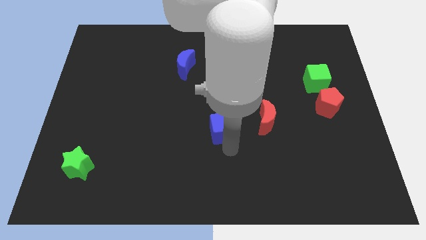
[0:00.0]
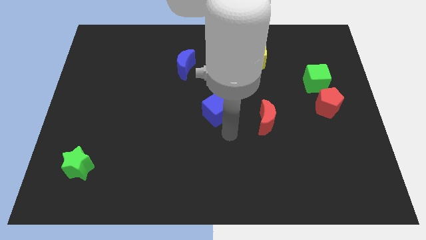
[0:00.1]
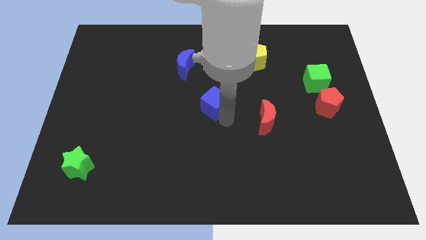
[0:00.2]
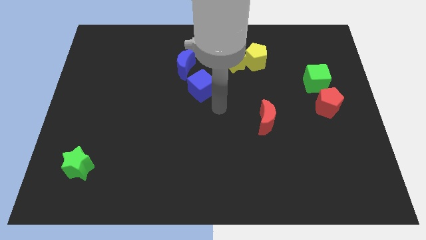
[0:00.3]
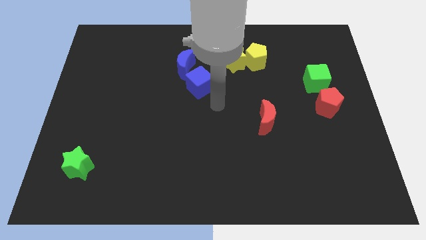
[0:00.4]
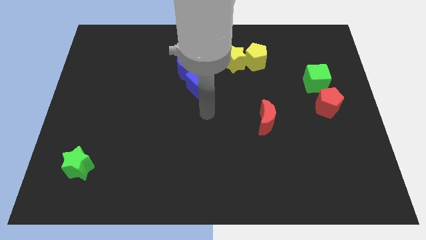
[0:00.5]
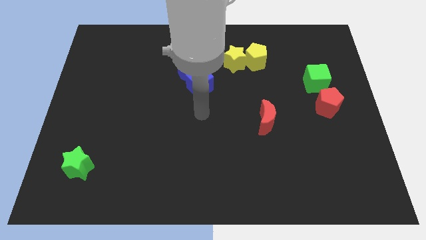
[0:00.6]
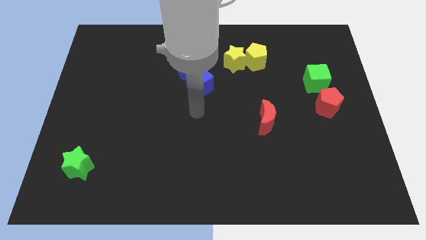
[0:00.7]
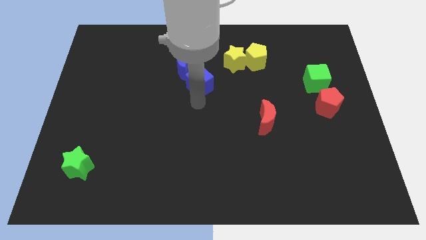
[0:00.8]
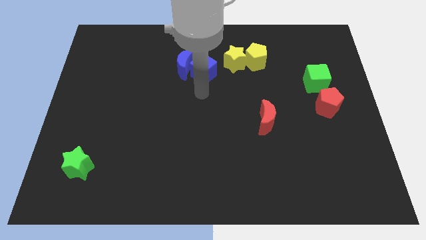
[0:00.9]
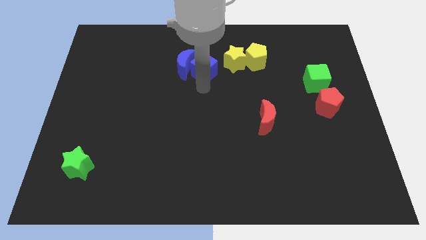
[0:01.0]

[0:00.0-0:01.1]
push the blue cube to the right of the blue crescent

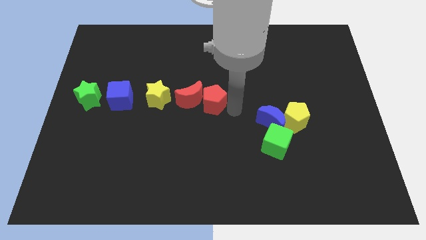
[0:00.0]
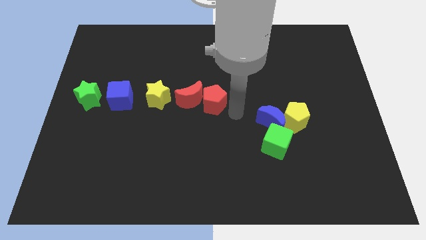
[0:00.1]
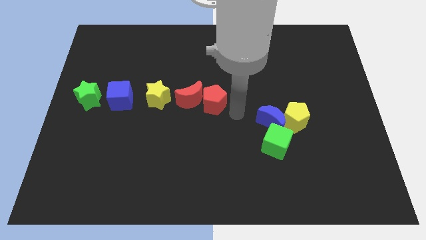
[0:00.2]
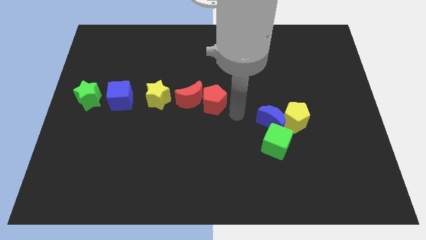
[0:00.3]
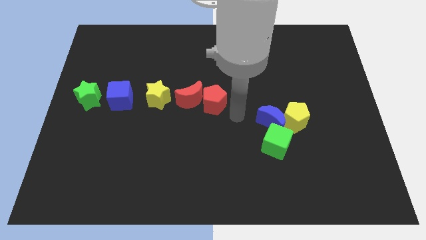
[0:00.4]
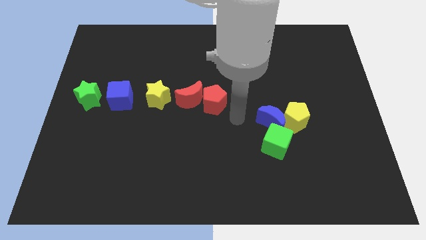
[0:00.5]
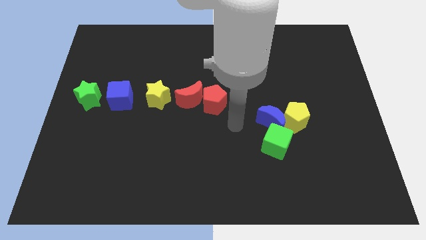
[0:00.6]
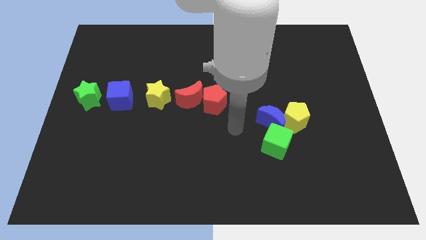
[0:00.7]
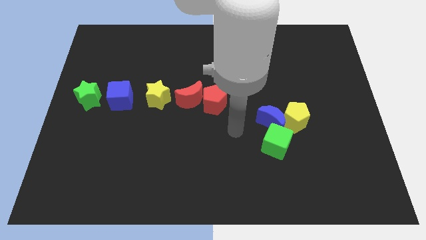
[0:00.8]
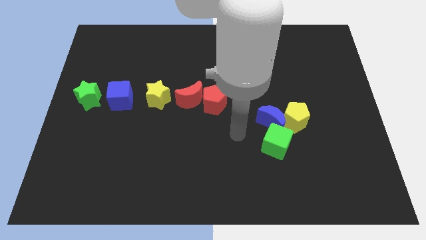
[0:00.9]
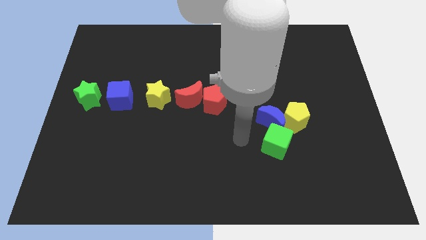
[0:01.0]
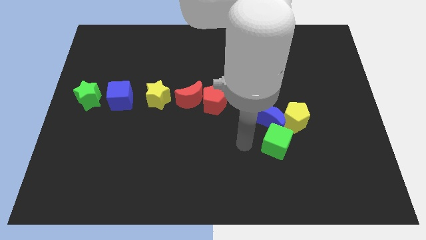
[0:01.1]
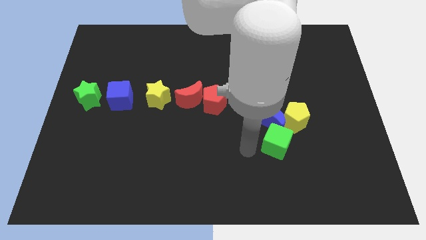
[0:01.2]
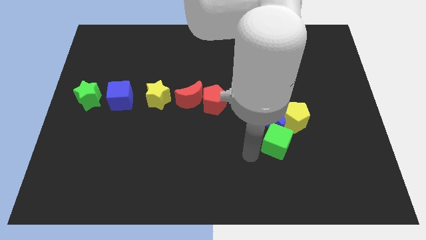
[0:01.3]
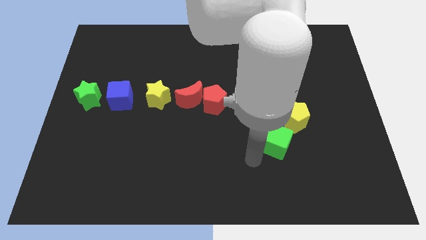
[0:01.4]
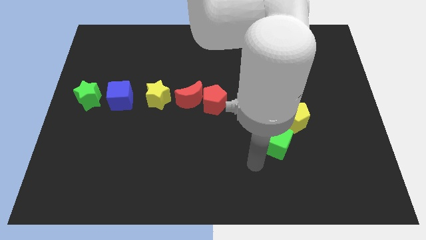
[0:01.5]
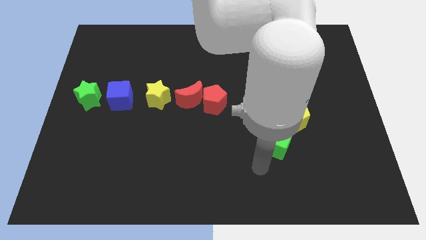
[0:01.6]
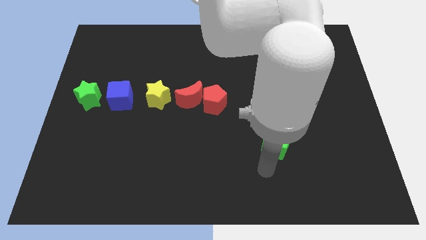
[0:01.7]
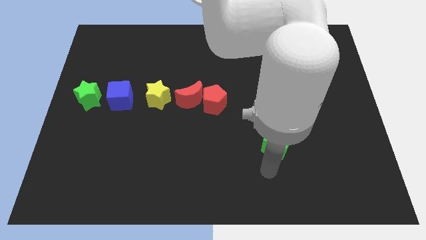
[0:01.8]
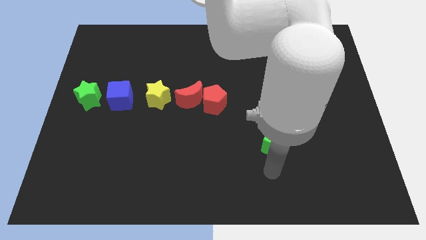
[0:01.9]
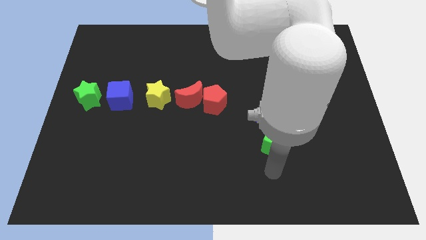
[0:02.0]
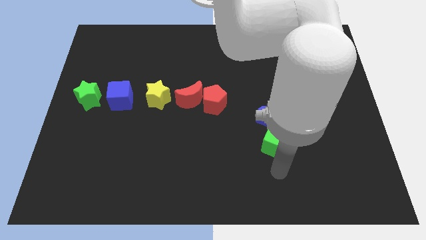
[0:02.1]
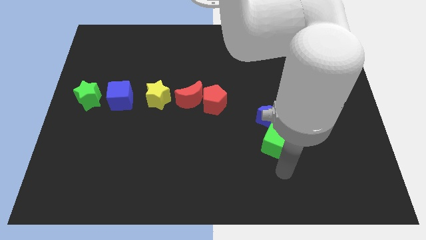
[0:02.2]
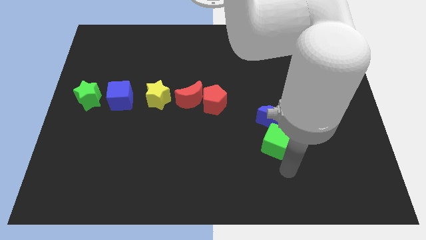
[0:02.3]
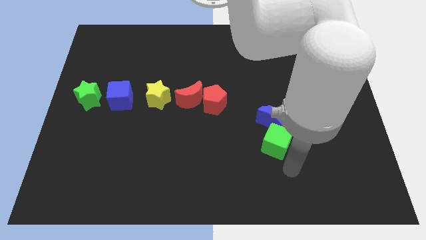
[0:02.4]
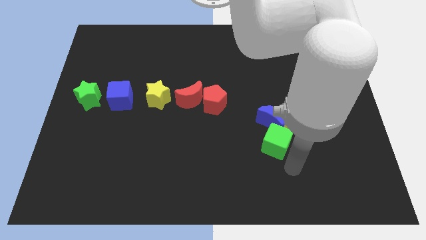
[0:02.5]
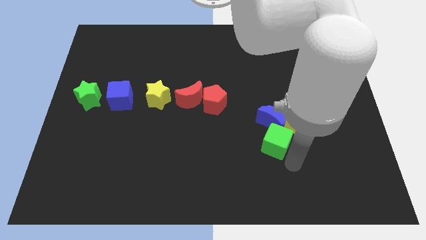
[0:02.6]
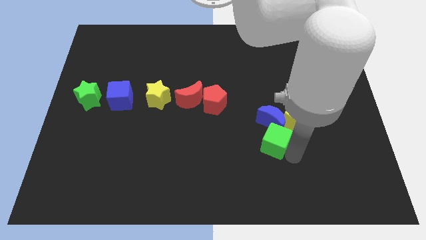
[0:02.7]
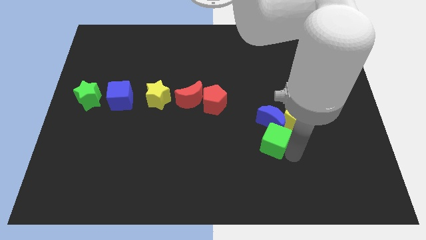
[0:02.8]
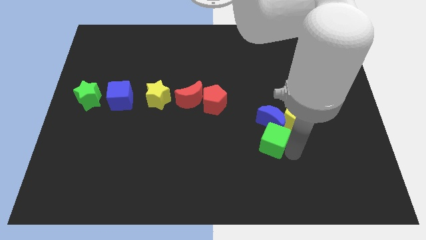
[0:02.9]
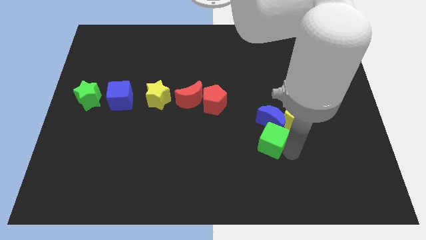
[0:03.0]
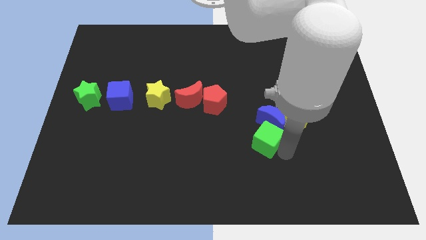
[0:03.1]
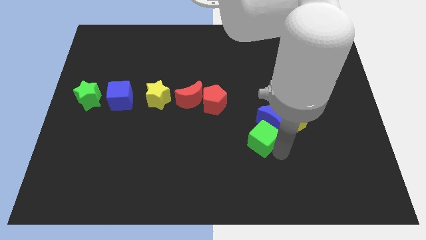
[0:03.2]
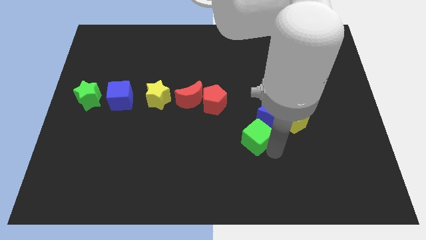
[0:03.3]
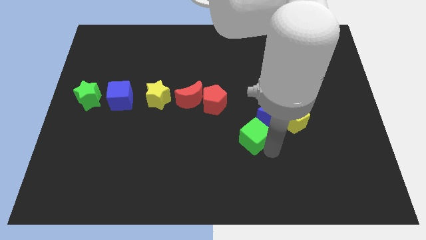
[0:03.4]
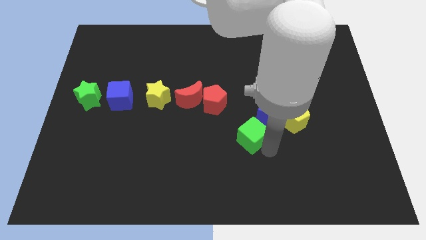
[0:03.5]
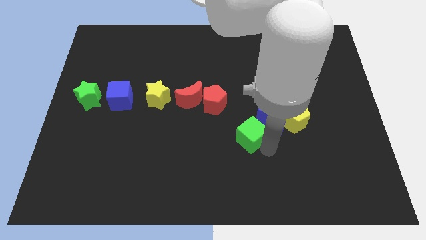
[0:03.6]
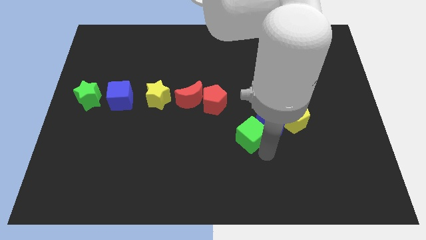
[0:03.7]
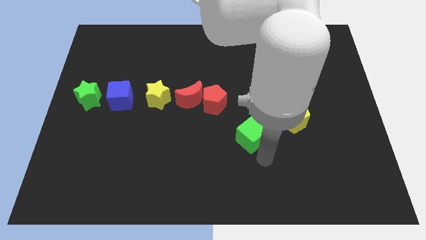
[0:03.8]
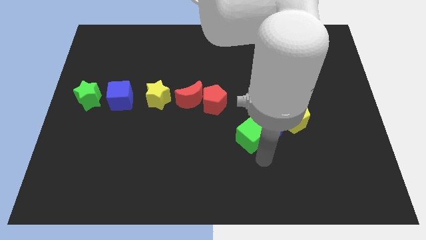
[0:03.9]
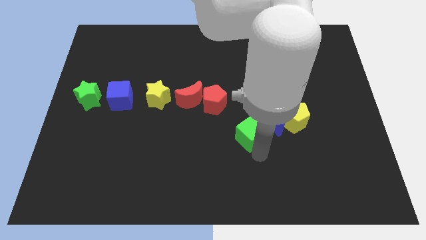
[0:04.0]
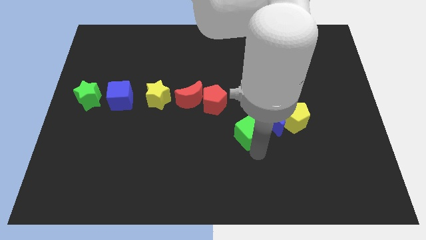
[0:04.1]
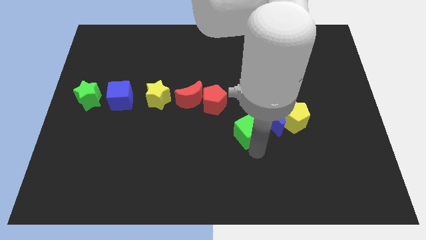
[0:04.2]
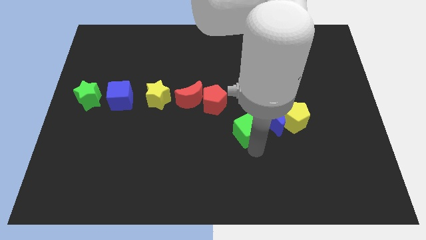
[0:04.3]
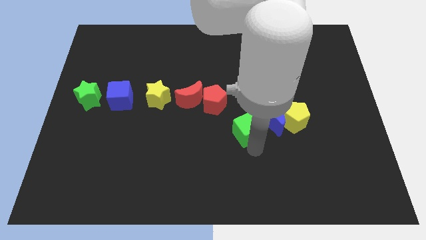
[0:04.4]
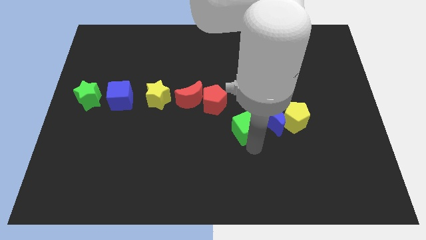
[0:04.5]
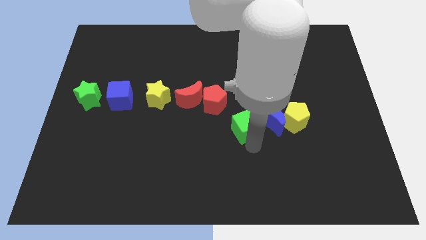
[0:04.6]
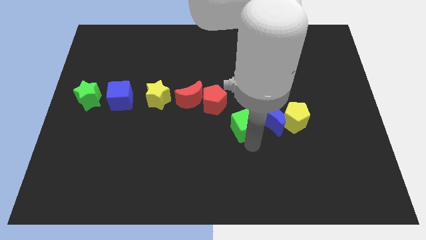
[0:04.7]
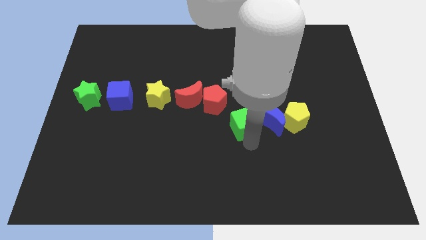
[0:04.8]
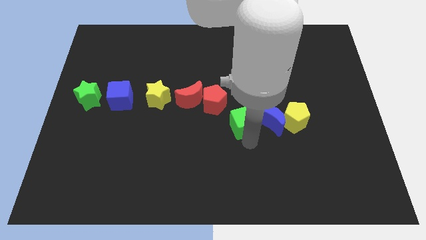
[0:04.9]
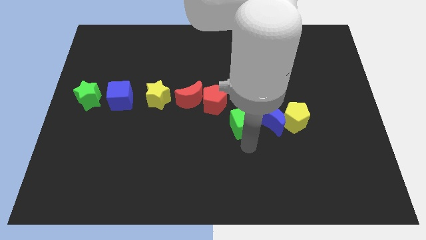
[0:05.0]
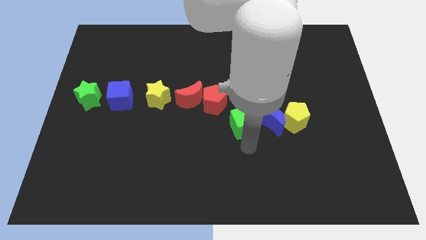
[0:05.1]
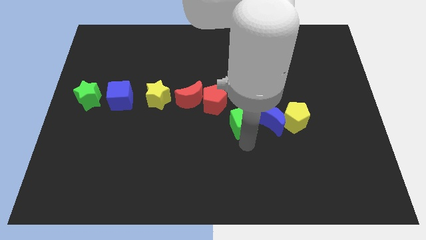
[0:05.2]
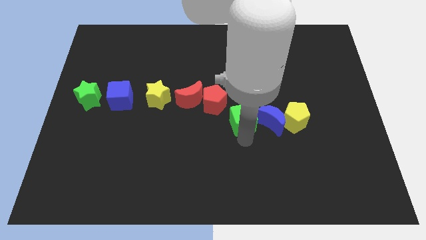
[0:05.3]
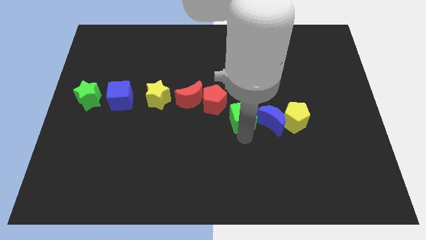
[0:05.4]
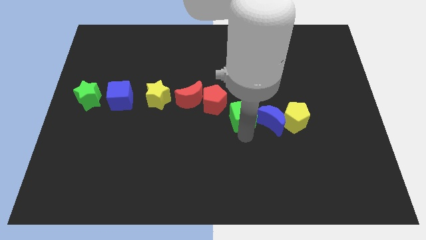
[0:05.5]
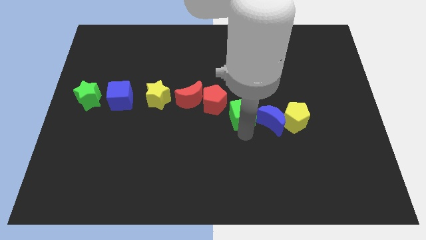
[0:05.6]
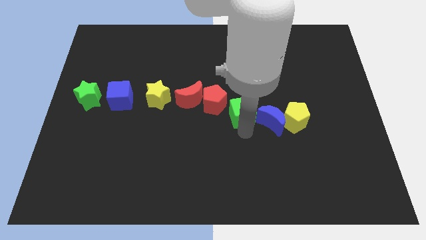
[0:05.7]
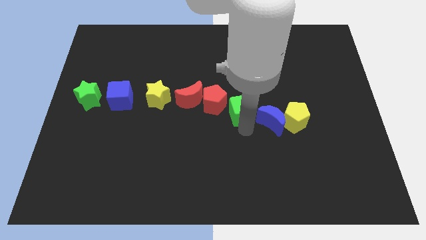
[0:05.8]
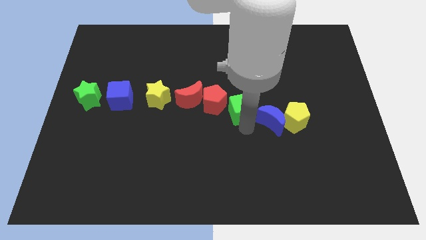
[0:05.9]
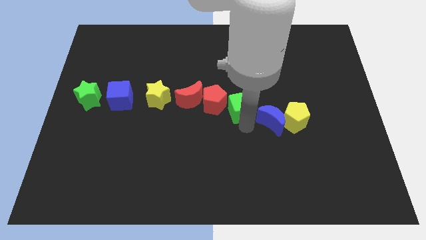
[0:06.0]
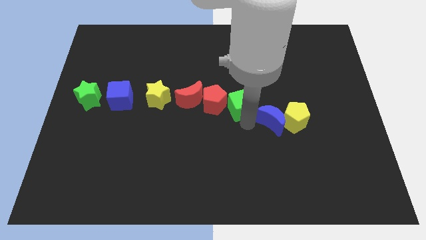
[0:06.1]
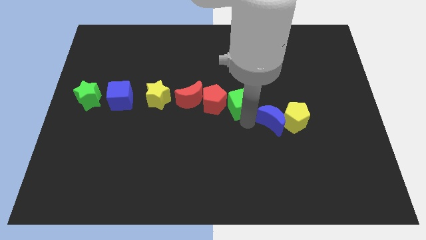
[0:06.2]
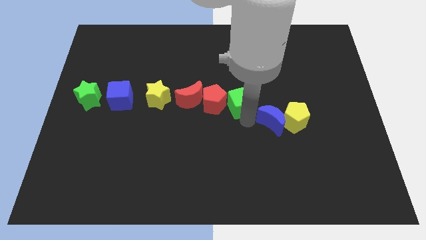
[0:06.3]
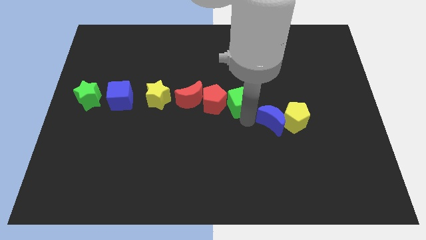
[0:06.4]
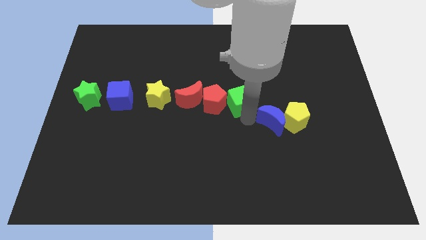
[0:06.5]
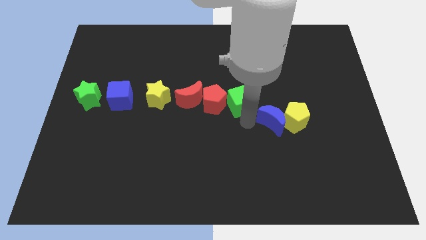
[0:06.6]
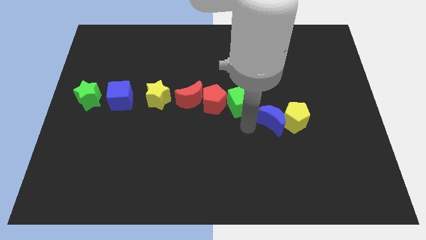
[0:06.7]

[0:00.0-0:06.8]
move the green cube to the right side of the red pentagon

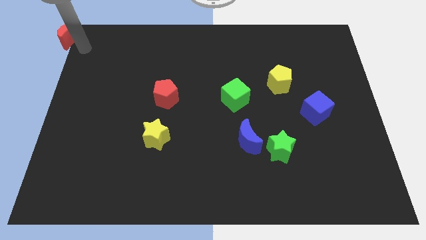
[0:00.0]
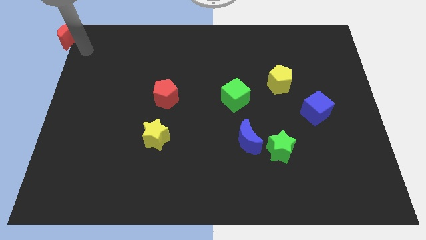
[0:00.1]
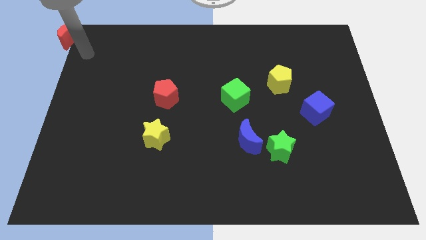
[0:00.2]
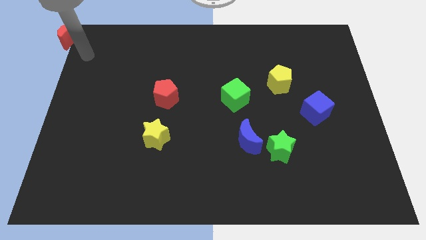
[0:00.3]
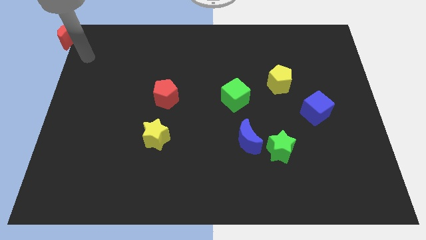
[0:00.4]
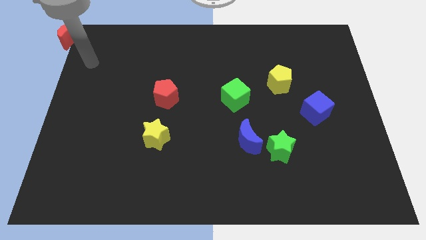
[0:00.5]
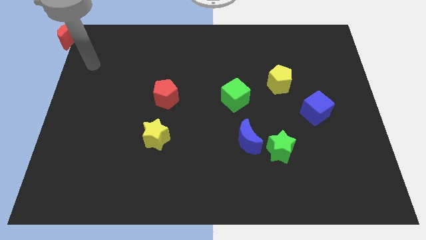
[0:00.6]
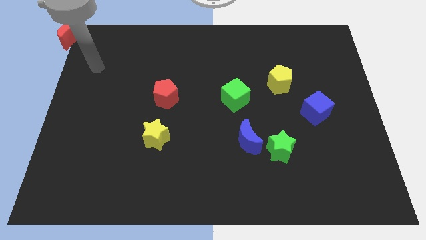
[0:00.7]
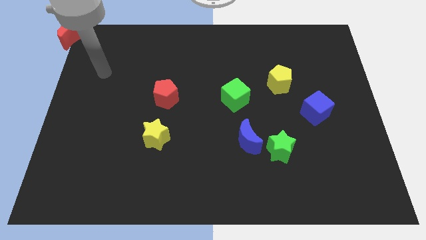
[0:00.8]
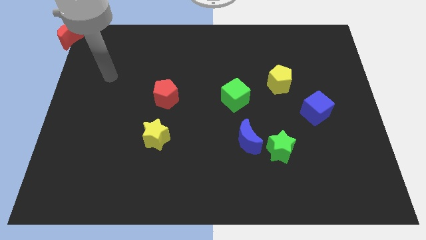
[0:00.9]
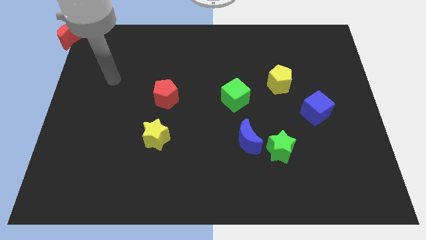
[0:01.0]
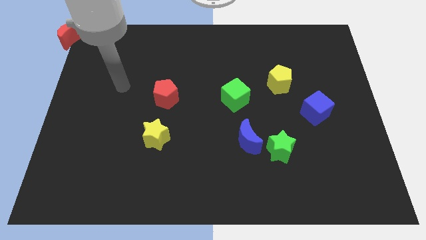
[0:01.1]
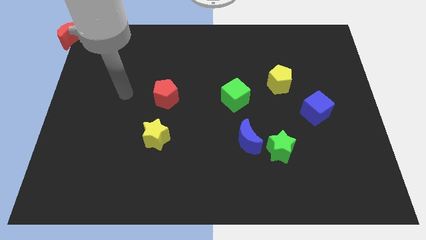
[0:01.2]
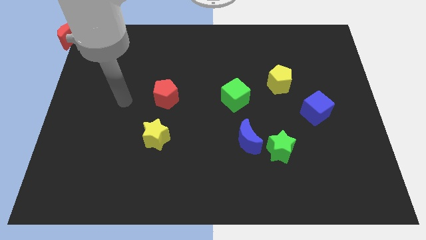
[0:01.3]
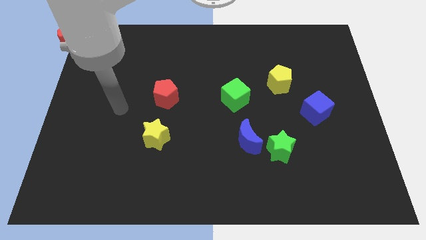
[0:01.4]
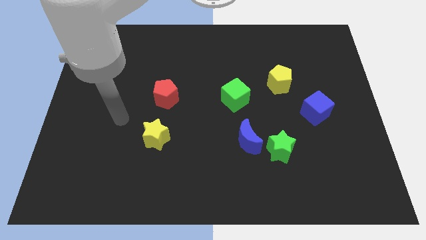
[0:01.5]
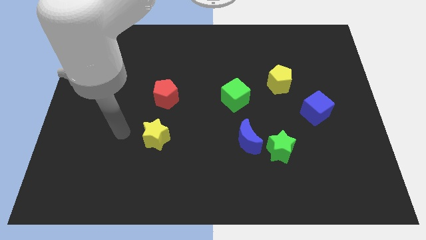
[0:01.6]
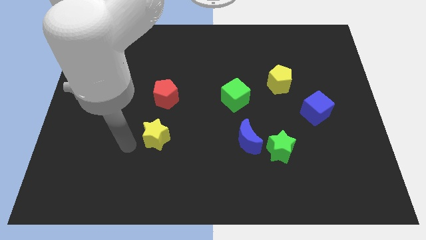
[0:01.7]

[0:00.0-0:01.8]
place your arm to the left of the yellow star
